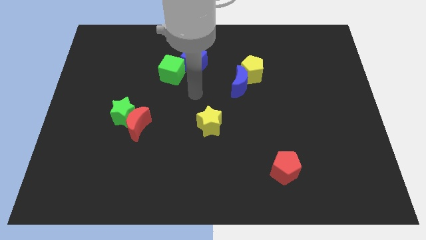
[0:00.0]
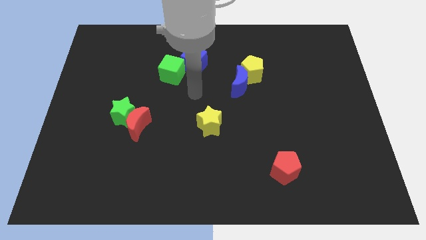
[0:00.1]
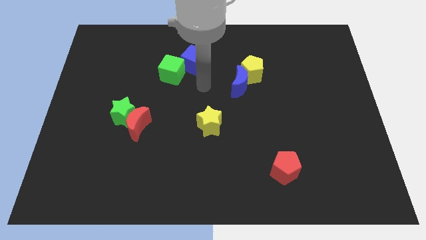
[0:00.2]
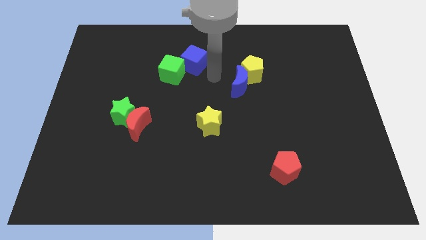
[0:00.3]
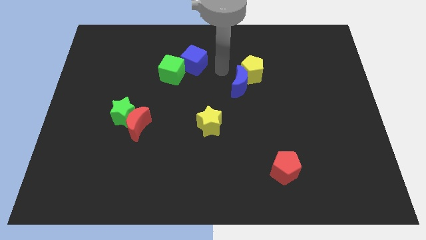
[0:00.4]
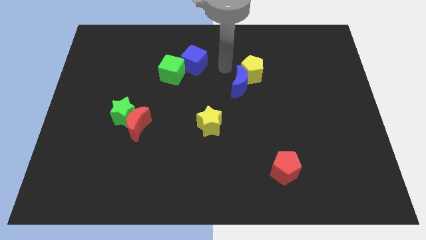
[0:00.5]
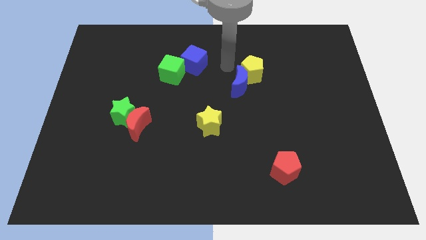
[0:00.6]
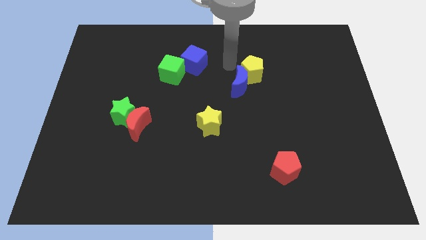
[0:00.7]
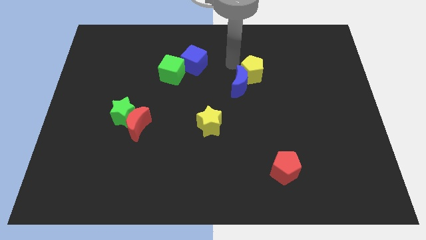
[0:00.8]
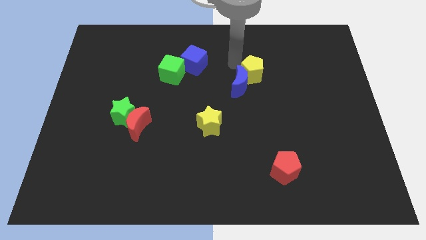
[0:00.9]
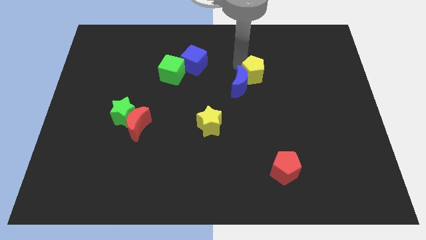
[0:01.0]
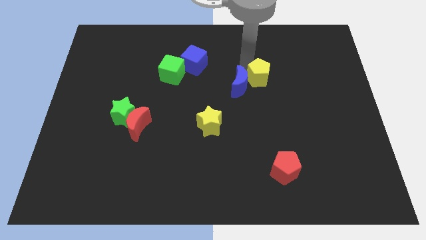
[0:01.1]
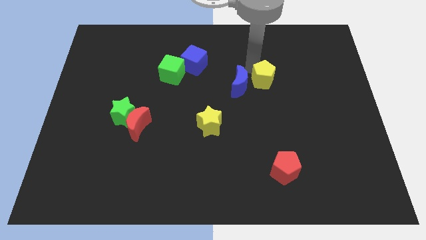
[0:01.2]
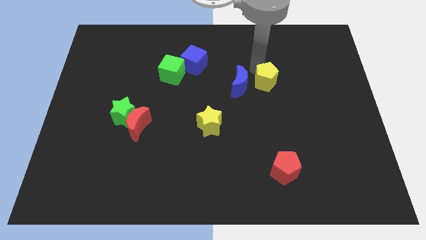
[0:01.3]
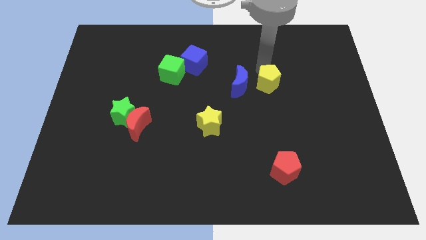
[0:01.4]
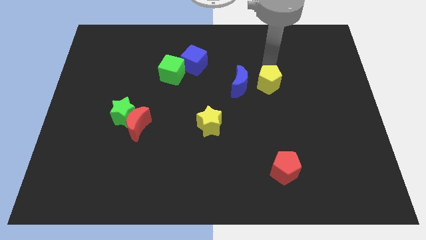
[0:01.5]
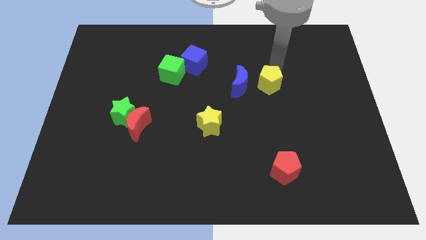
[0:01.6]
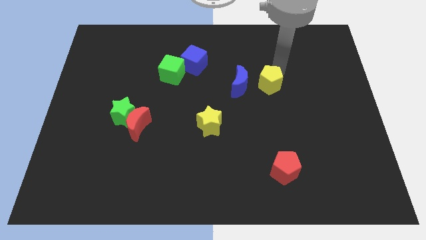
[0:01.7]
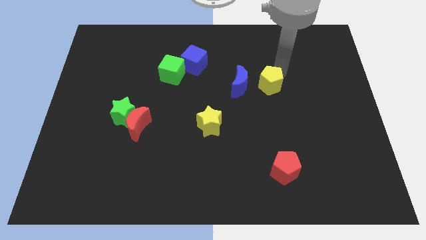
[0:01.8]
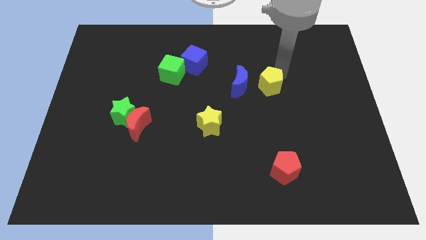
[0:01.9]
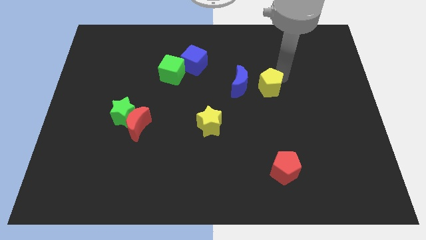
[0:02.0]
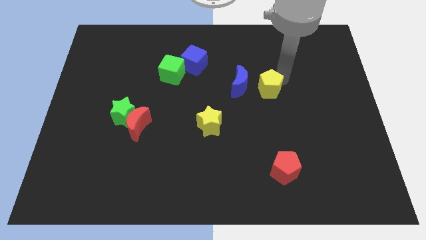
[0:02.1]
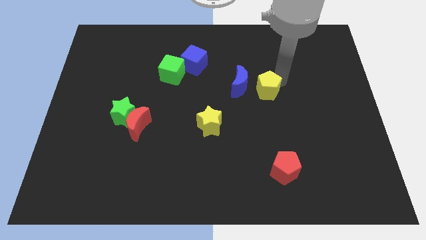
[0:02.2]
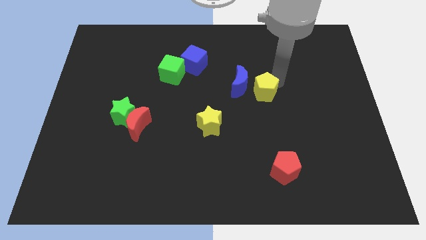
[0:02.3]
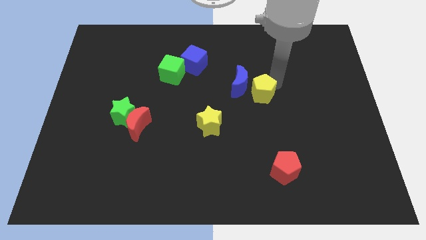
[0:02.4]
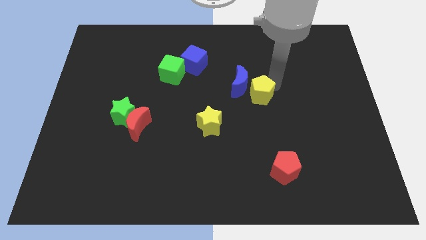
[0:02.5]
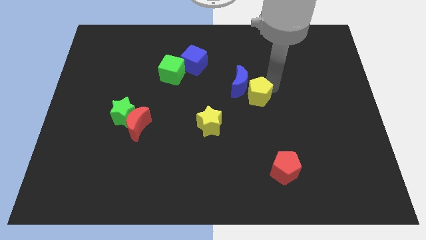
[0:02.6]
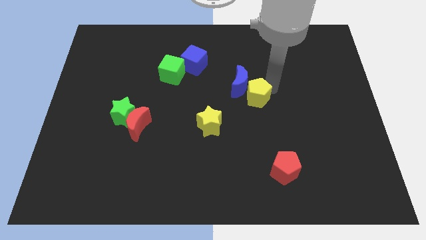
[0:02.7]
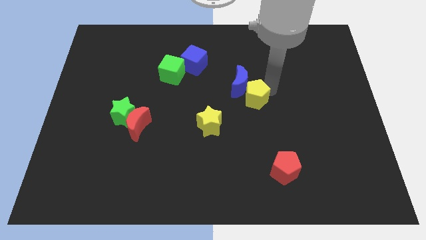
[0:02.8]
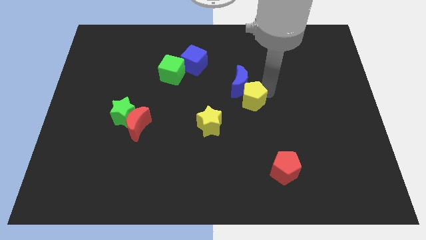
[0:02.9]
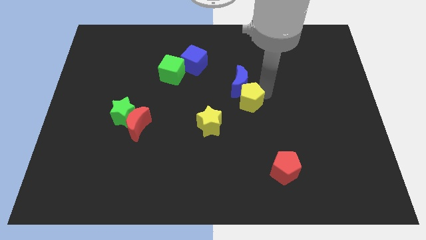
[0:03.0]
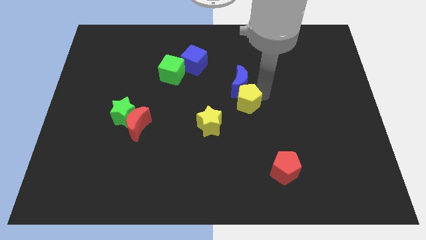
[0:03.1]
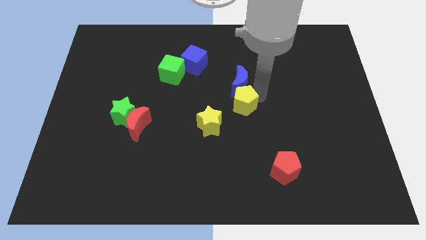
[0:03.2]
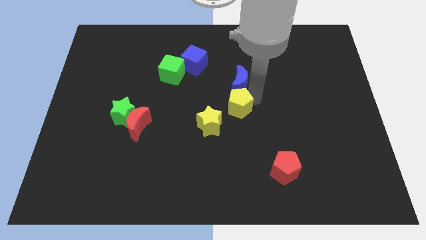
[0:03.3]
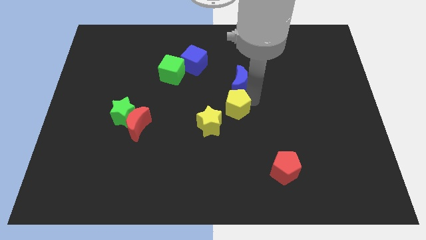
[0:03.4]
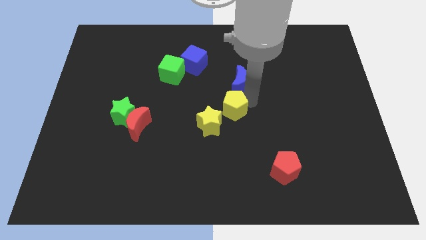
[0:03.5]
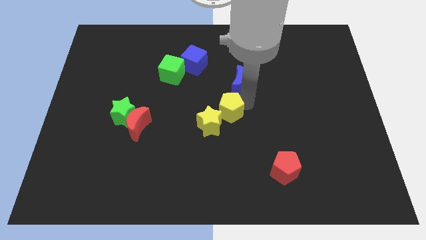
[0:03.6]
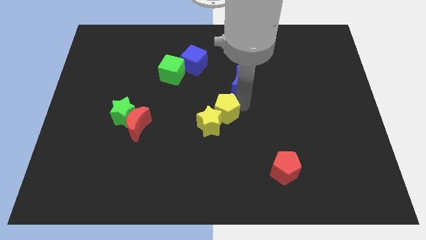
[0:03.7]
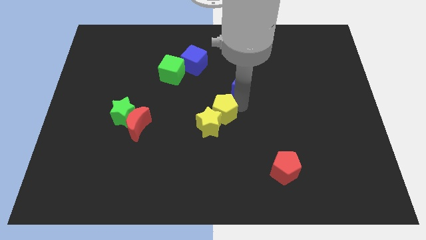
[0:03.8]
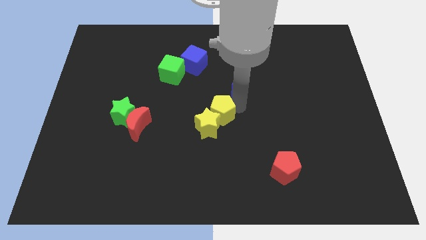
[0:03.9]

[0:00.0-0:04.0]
put the yellow pentagon towards the yellow star

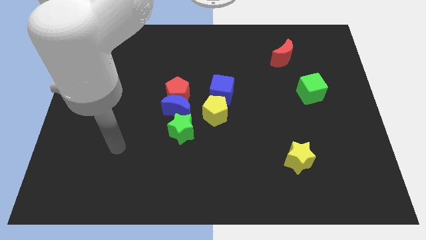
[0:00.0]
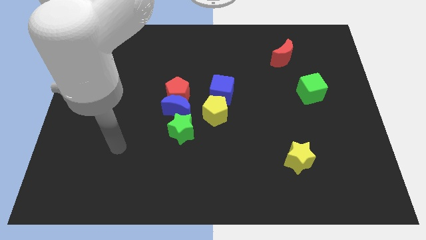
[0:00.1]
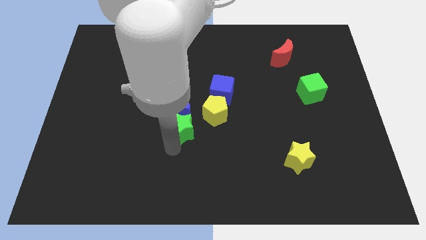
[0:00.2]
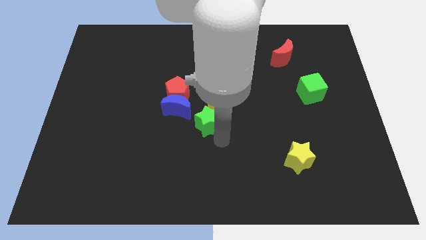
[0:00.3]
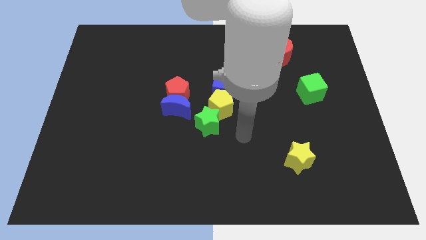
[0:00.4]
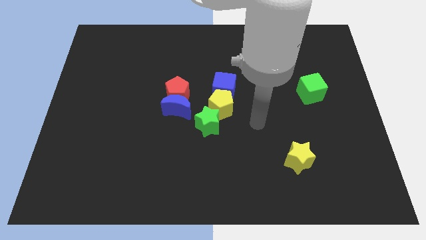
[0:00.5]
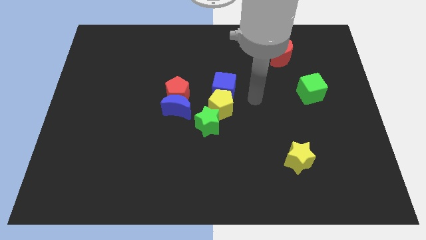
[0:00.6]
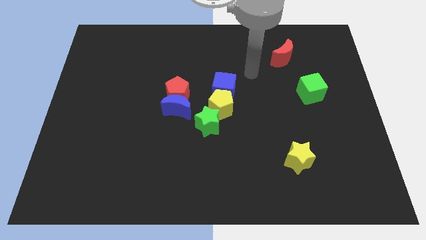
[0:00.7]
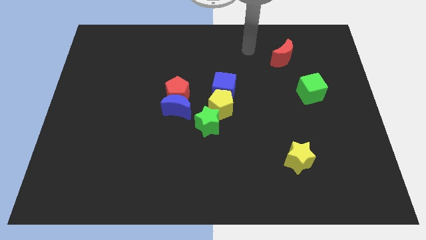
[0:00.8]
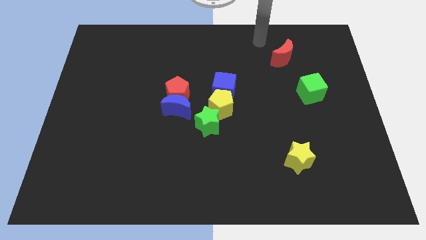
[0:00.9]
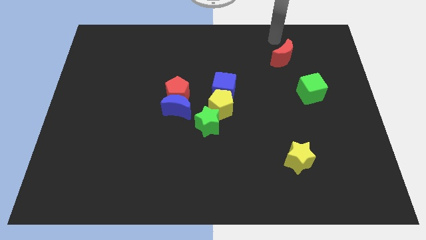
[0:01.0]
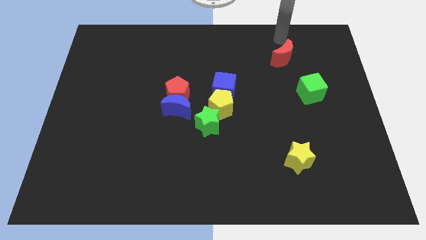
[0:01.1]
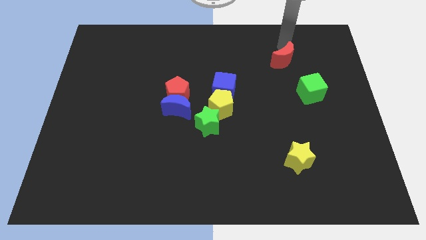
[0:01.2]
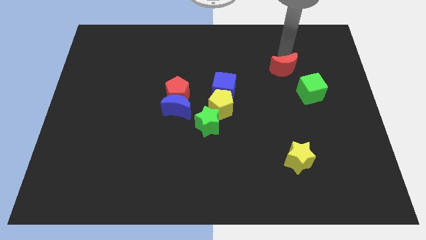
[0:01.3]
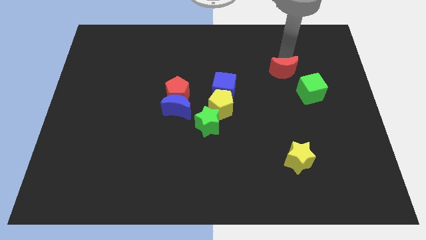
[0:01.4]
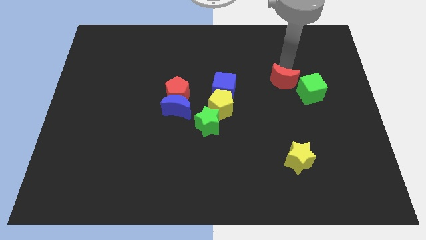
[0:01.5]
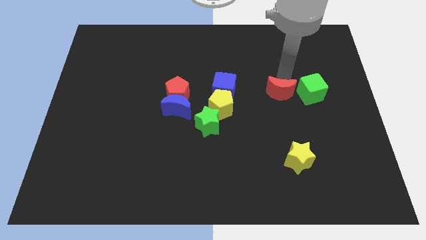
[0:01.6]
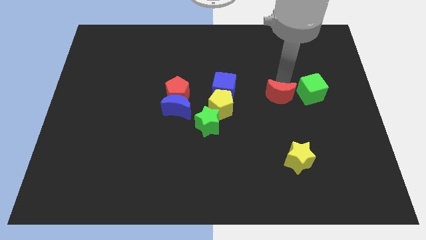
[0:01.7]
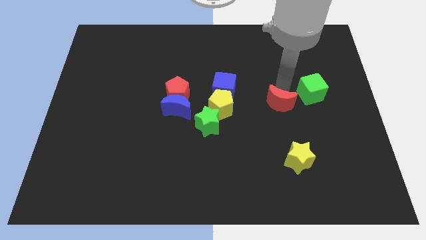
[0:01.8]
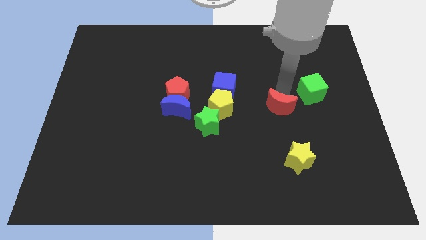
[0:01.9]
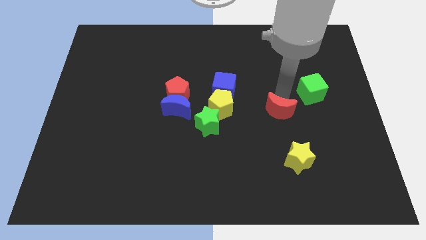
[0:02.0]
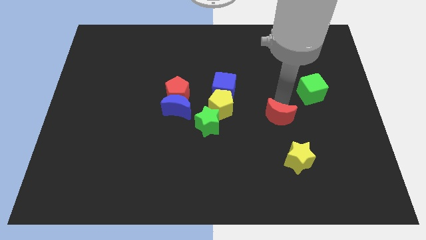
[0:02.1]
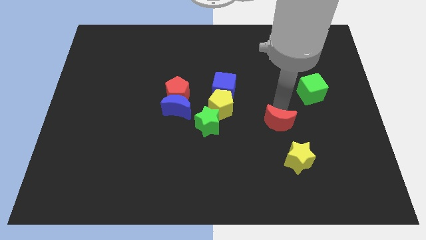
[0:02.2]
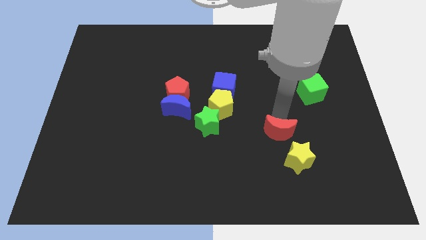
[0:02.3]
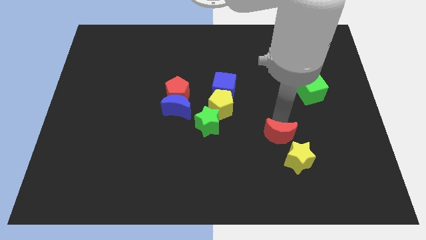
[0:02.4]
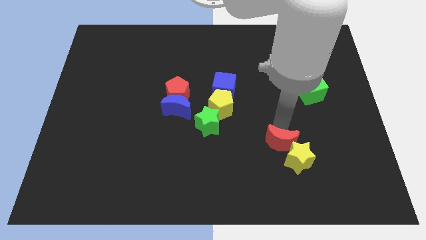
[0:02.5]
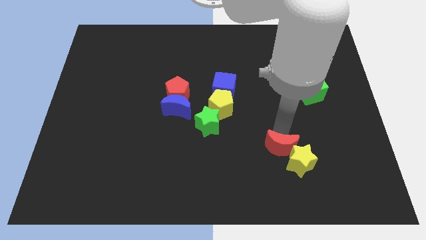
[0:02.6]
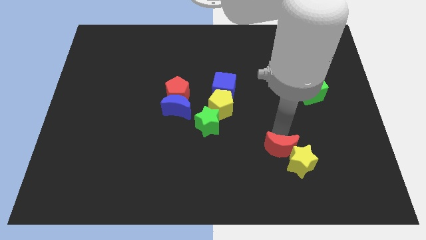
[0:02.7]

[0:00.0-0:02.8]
move the red moon towards the yellow star

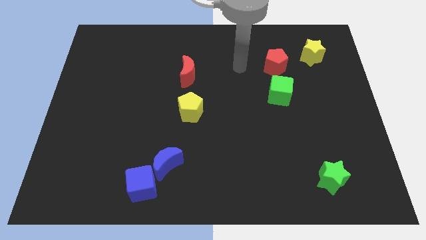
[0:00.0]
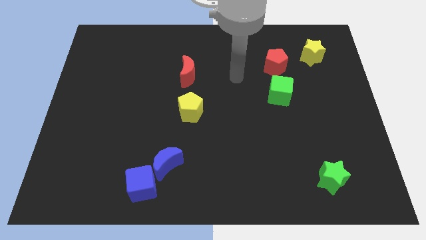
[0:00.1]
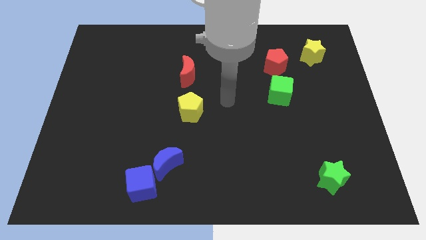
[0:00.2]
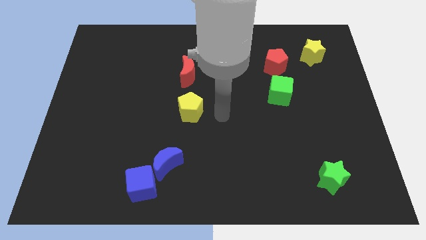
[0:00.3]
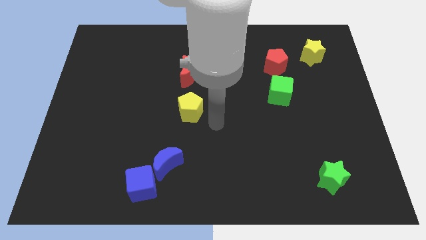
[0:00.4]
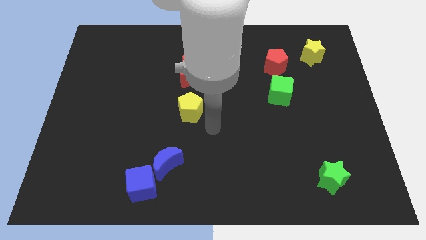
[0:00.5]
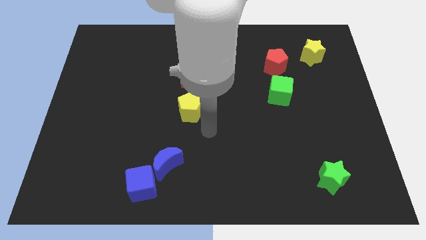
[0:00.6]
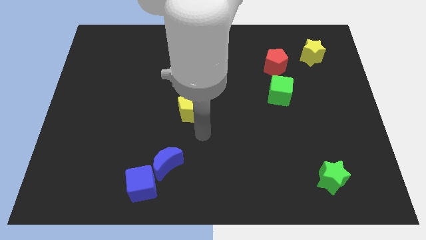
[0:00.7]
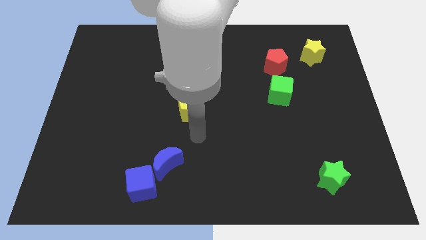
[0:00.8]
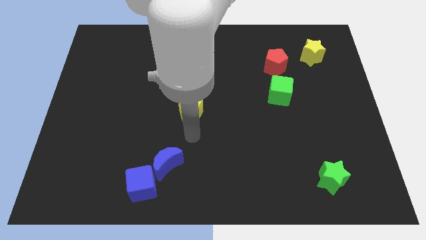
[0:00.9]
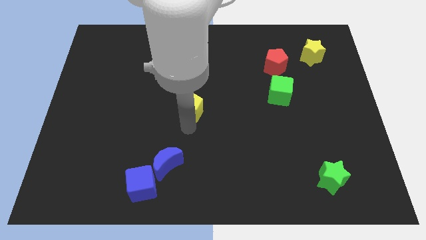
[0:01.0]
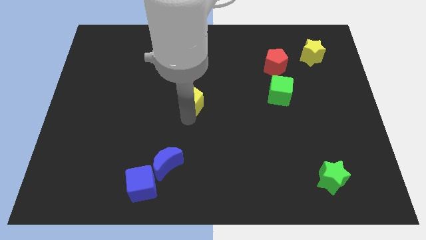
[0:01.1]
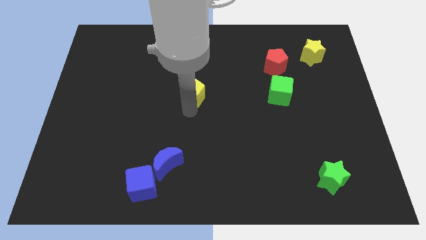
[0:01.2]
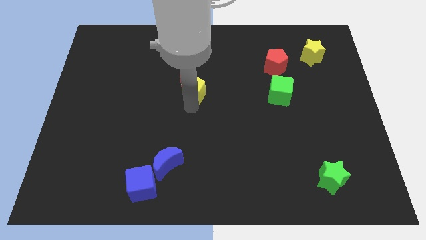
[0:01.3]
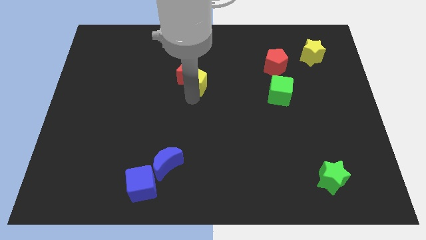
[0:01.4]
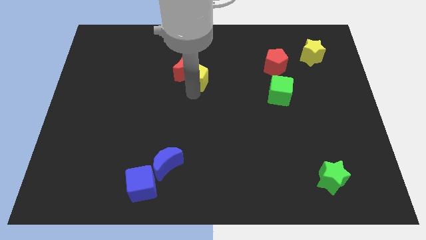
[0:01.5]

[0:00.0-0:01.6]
move the yellow pentagon next to the red moon

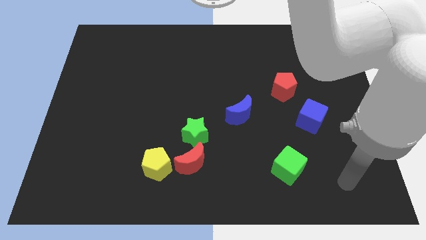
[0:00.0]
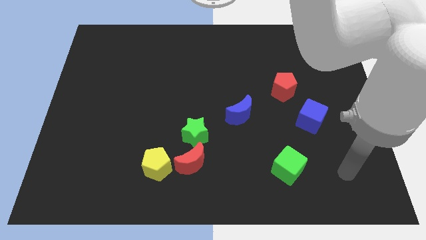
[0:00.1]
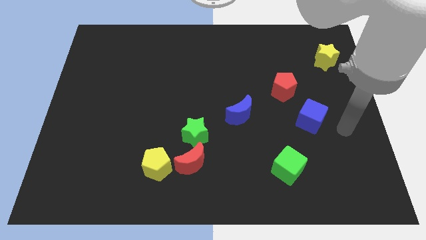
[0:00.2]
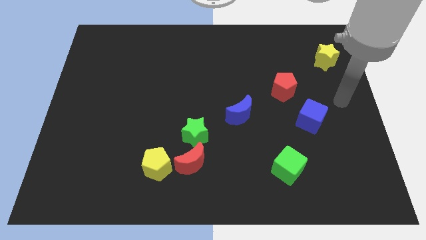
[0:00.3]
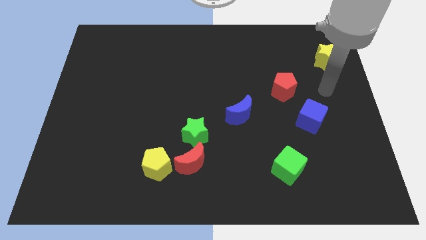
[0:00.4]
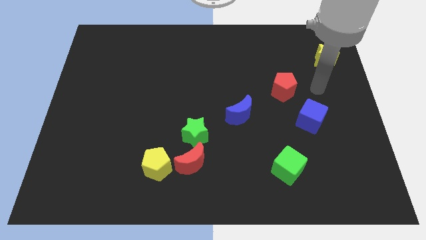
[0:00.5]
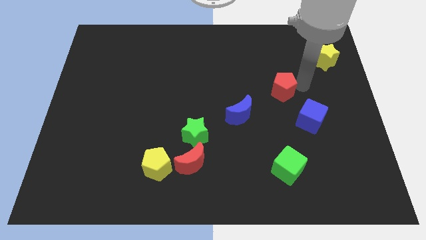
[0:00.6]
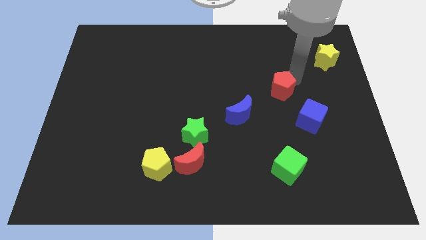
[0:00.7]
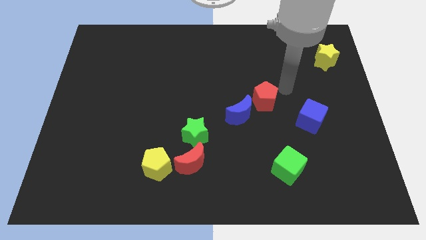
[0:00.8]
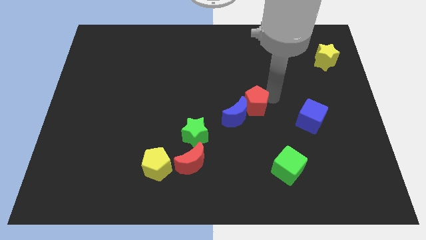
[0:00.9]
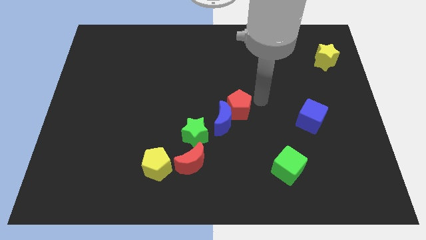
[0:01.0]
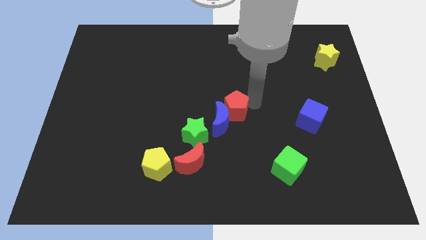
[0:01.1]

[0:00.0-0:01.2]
move the red pentagon to the blue moon
